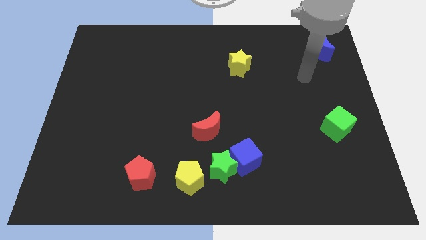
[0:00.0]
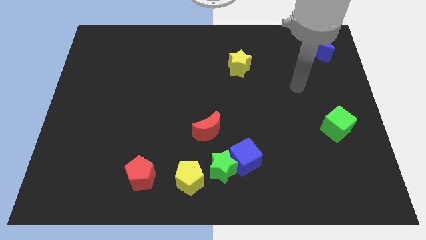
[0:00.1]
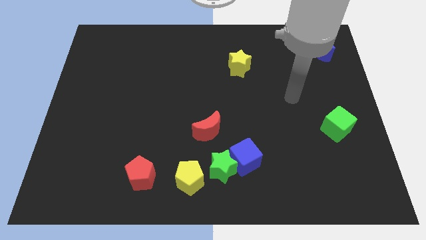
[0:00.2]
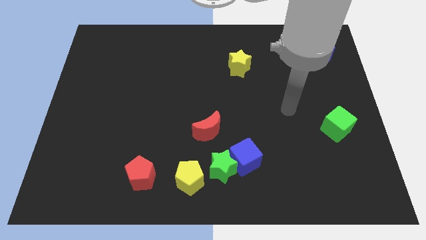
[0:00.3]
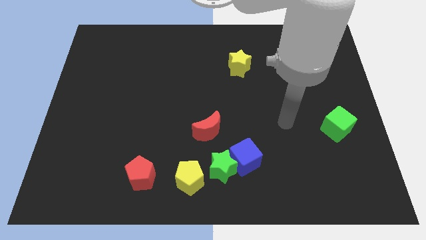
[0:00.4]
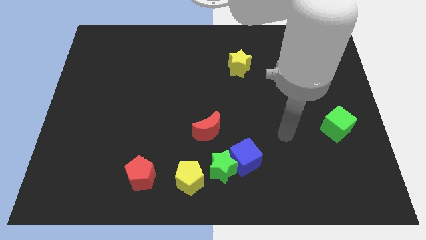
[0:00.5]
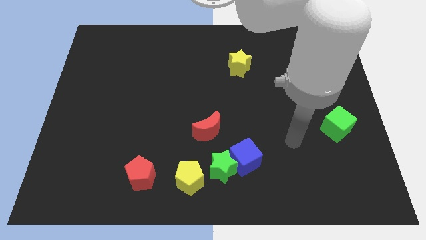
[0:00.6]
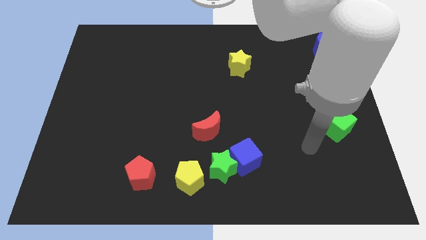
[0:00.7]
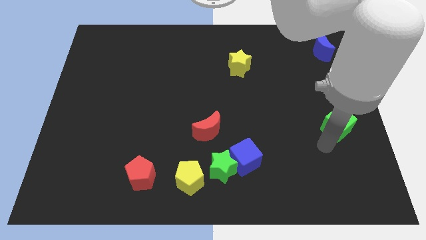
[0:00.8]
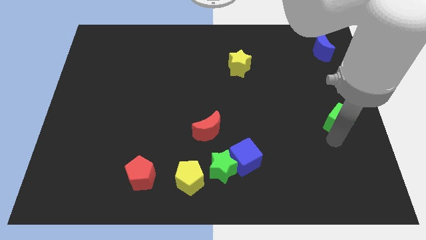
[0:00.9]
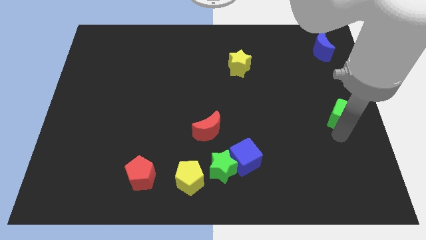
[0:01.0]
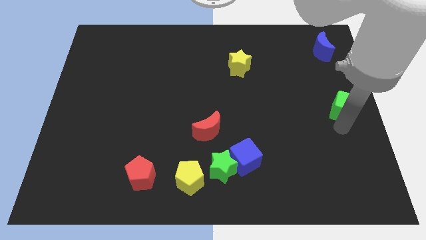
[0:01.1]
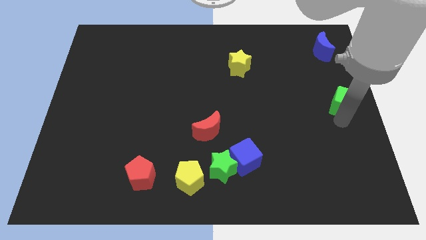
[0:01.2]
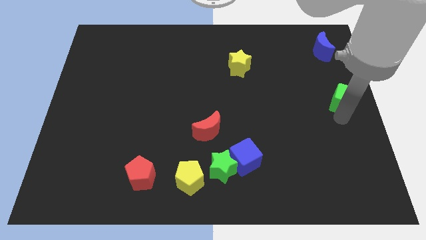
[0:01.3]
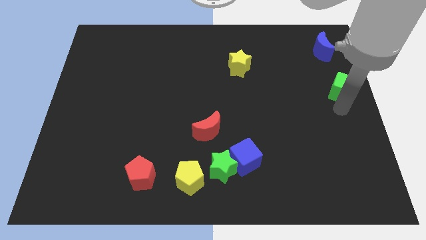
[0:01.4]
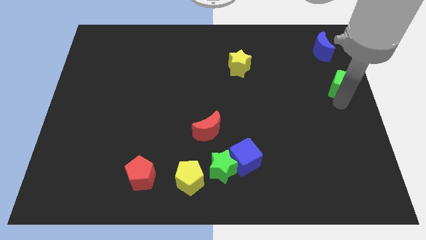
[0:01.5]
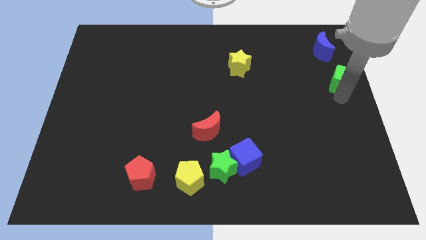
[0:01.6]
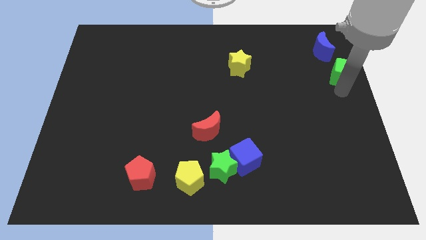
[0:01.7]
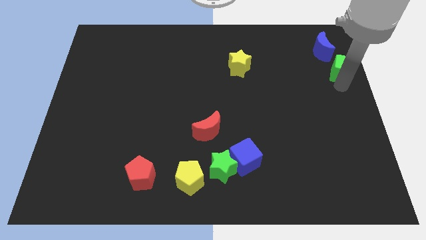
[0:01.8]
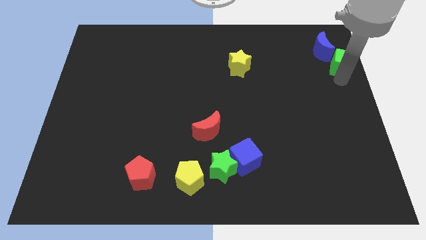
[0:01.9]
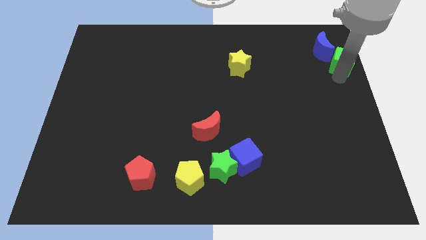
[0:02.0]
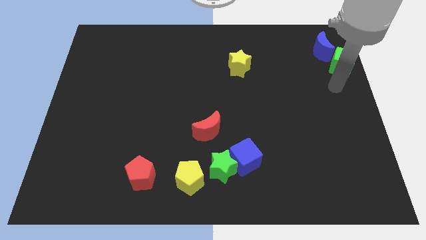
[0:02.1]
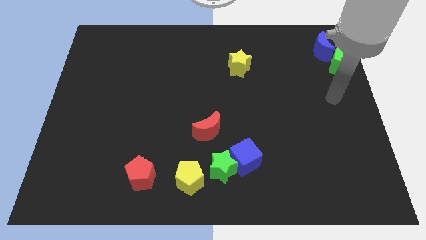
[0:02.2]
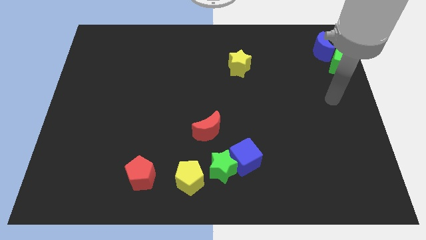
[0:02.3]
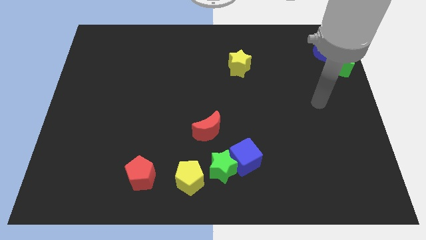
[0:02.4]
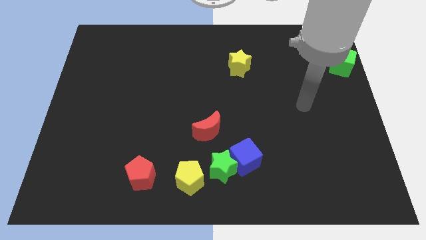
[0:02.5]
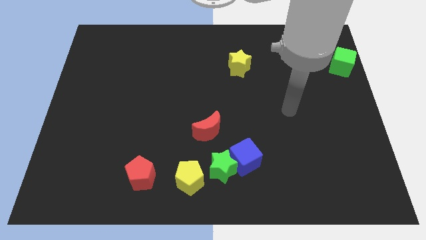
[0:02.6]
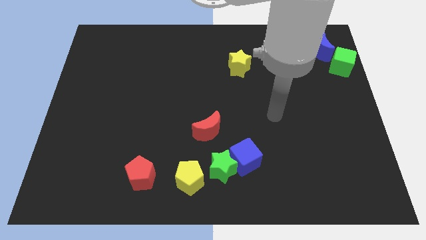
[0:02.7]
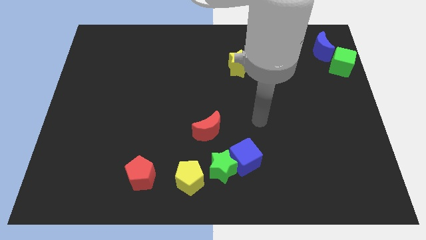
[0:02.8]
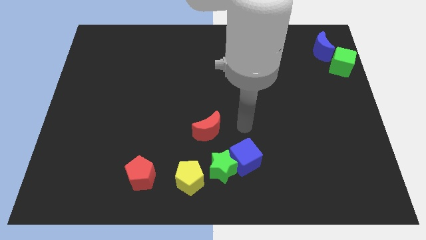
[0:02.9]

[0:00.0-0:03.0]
push the green cube to the top right corner of the board

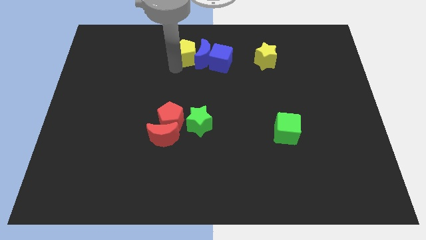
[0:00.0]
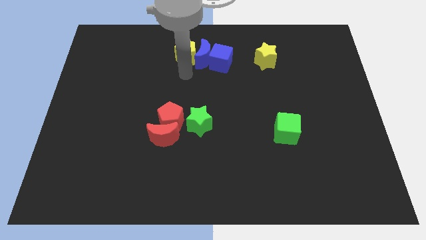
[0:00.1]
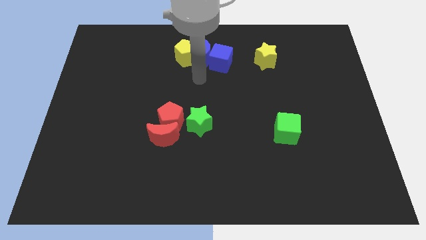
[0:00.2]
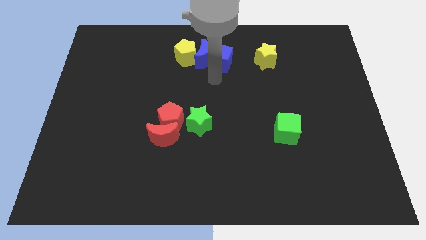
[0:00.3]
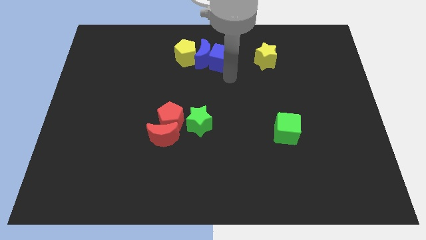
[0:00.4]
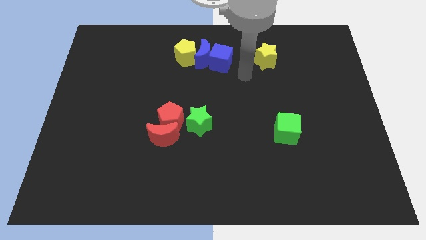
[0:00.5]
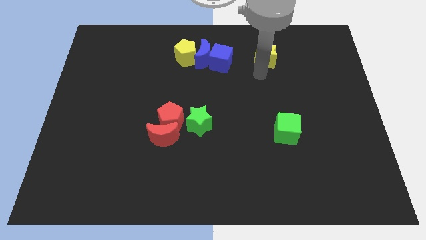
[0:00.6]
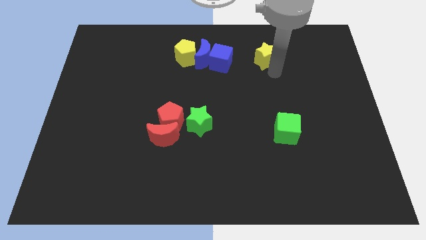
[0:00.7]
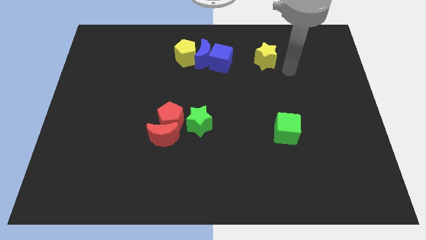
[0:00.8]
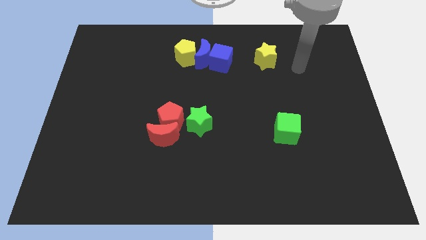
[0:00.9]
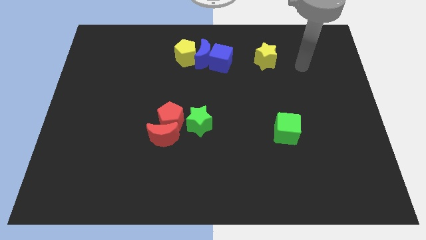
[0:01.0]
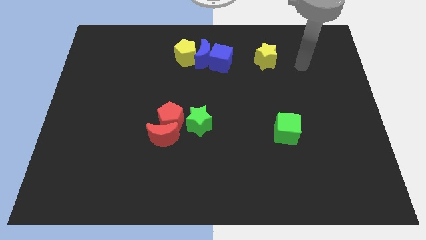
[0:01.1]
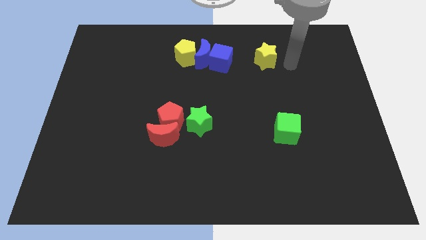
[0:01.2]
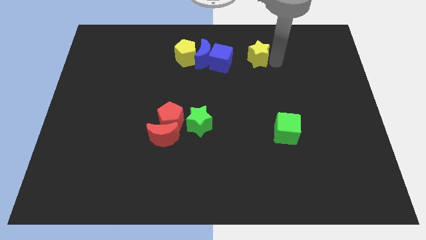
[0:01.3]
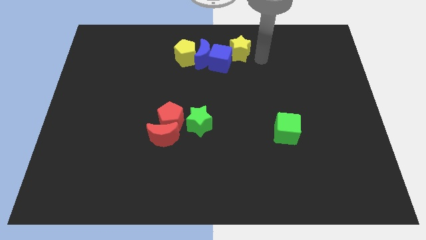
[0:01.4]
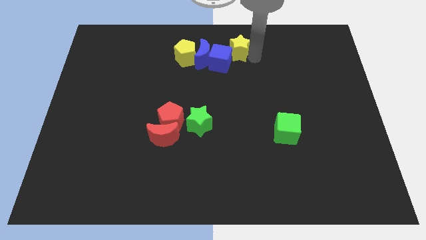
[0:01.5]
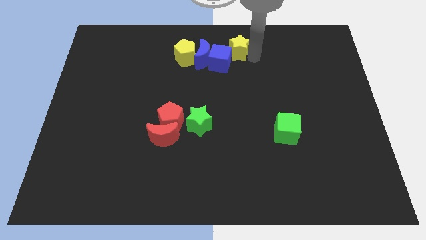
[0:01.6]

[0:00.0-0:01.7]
drag the yellow star into the right side of the blue cube

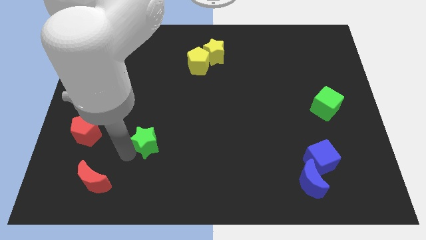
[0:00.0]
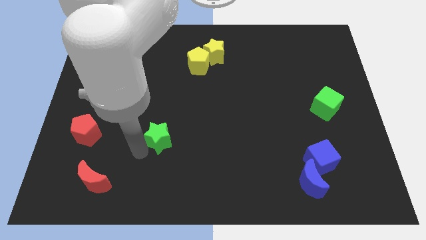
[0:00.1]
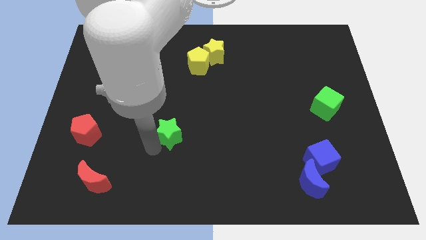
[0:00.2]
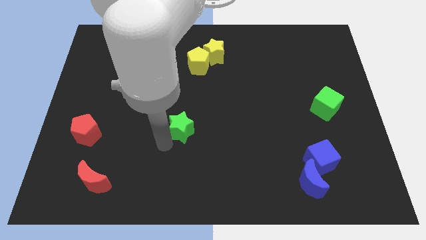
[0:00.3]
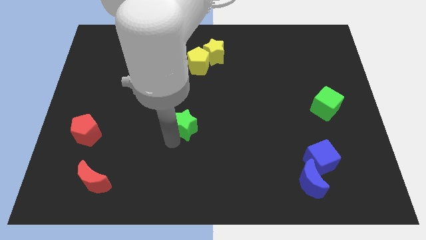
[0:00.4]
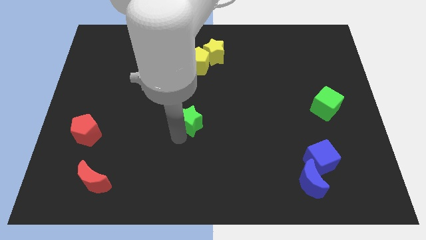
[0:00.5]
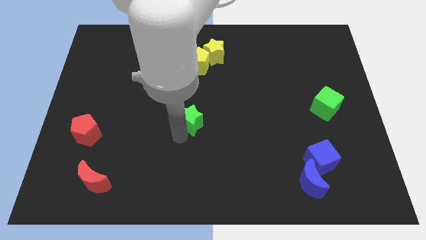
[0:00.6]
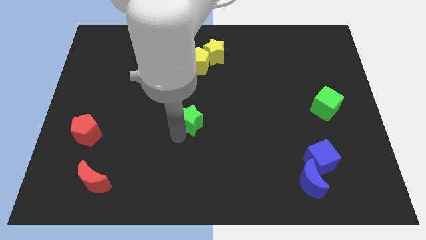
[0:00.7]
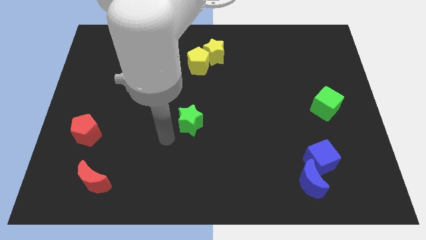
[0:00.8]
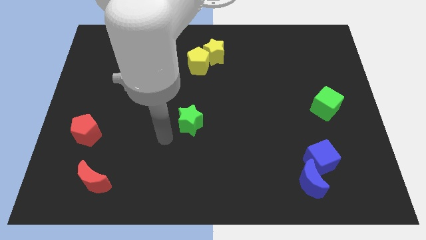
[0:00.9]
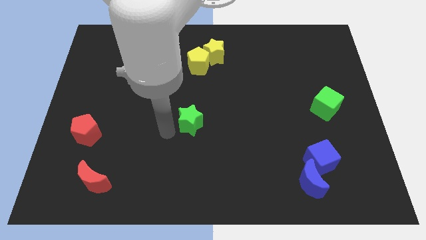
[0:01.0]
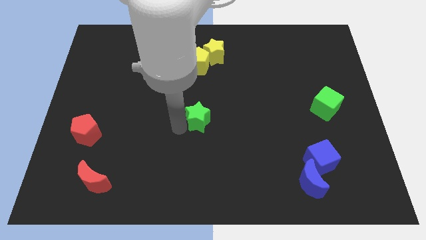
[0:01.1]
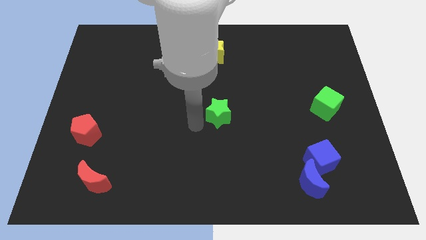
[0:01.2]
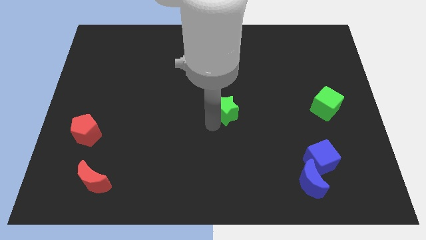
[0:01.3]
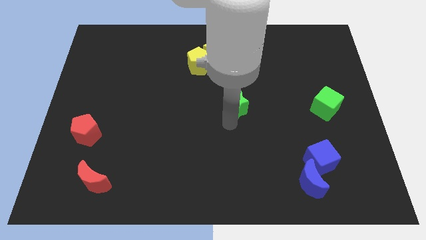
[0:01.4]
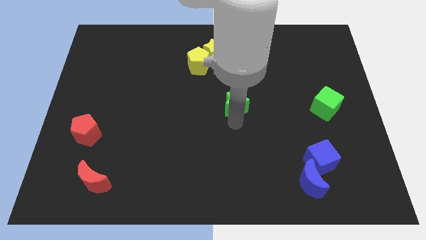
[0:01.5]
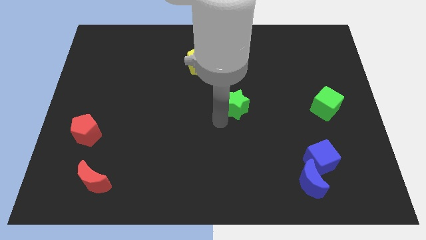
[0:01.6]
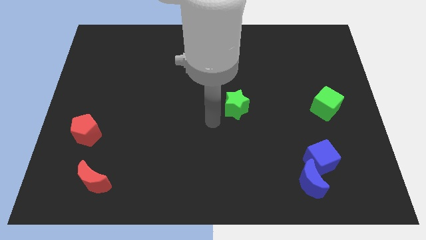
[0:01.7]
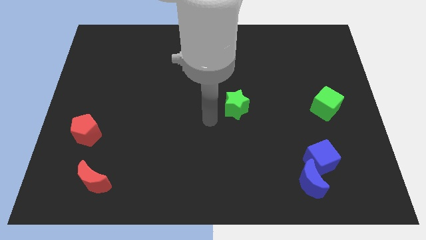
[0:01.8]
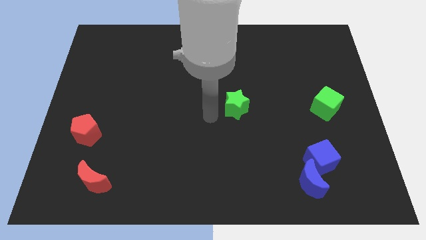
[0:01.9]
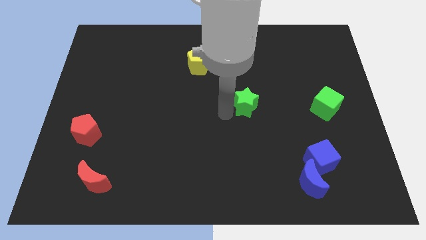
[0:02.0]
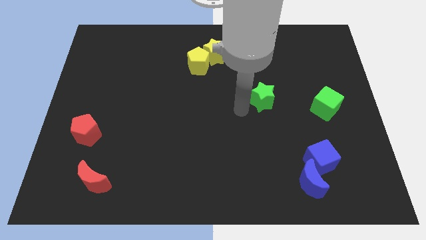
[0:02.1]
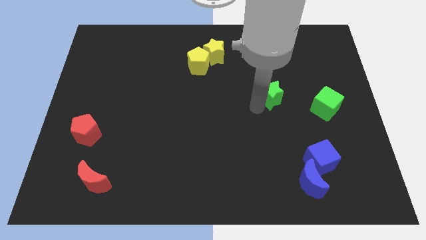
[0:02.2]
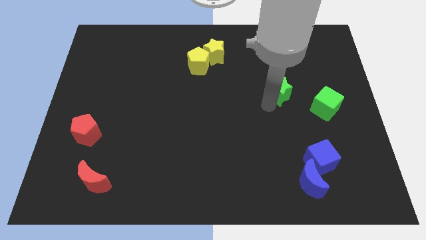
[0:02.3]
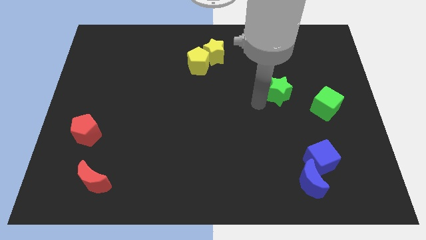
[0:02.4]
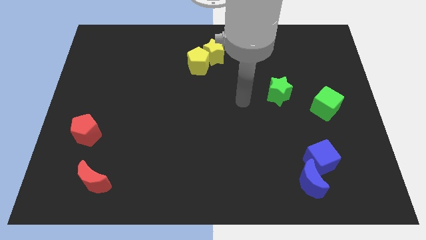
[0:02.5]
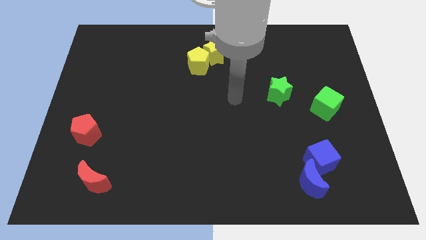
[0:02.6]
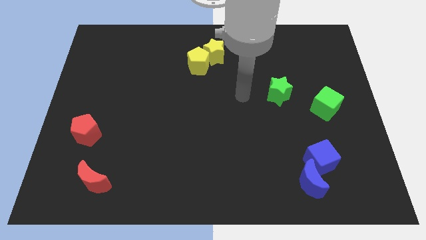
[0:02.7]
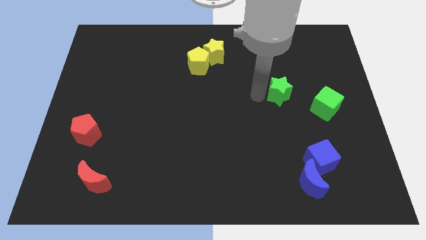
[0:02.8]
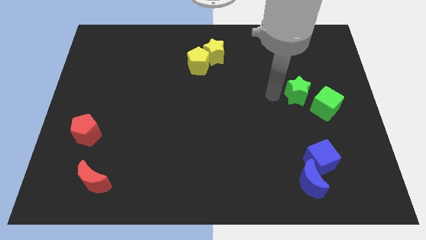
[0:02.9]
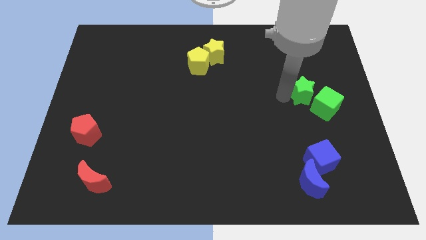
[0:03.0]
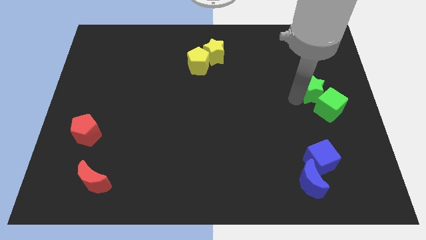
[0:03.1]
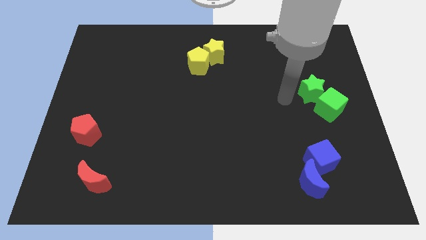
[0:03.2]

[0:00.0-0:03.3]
slide the green star into green cube

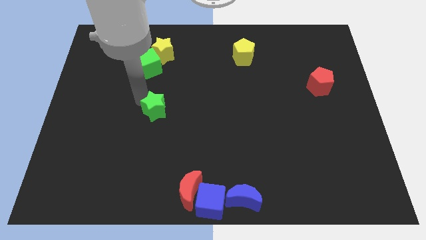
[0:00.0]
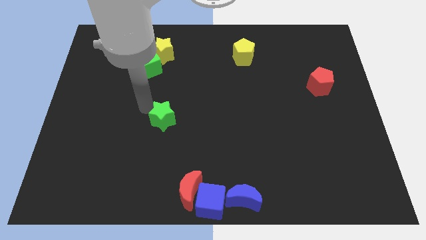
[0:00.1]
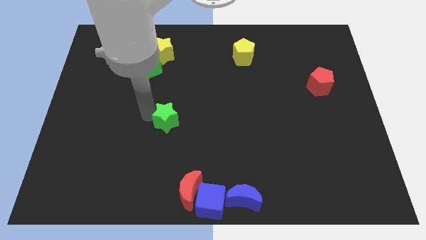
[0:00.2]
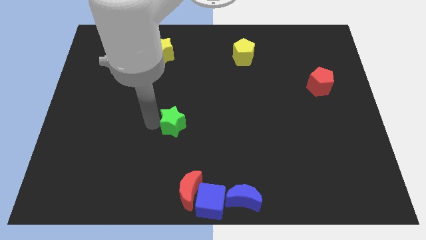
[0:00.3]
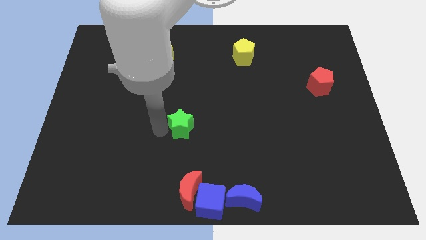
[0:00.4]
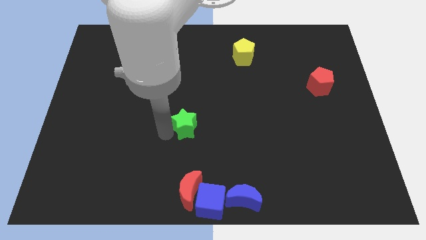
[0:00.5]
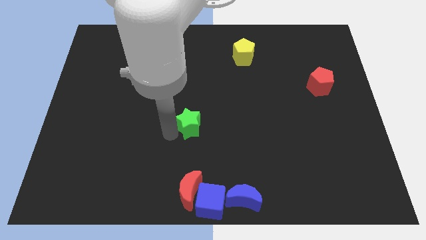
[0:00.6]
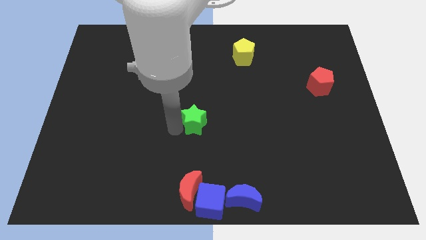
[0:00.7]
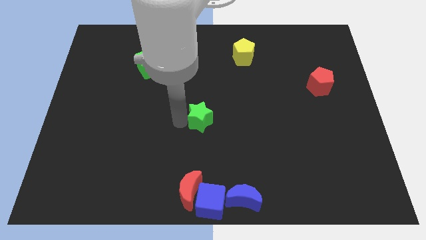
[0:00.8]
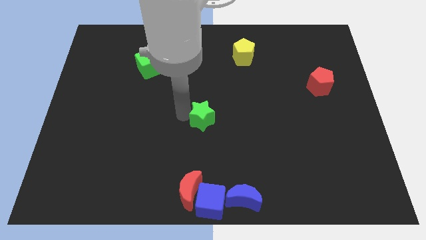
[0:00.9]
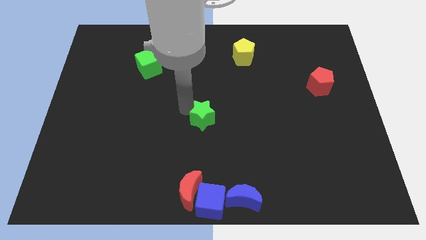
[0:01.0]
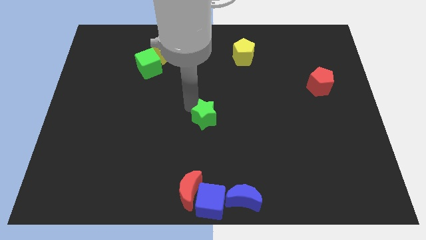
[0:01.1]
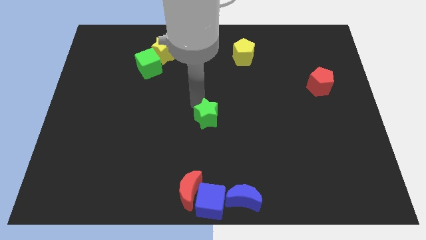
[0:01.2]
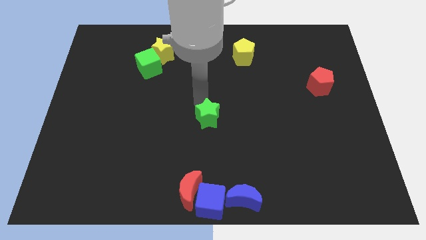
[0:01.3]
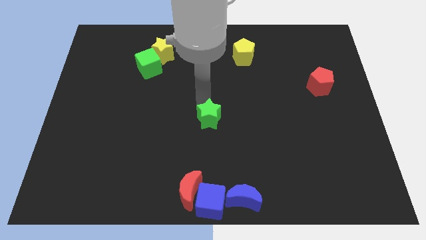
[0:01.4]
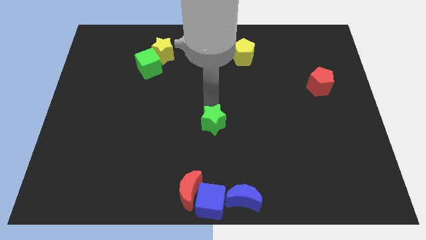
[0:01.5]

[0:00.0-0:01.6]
push the green star center of the board
